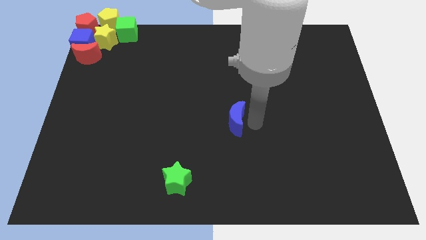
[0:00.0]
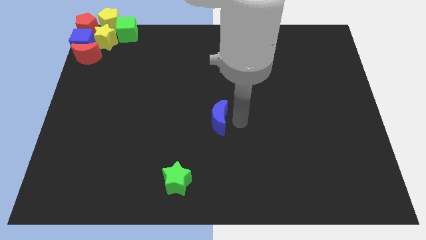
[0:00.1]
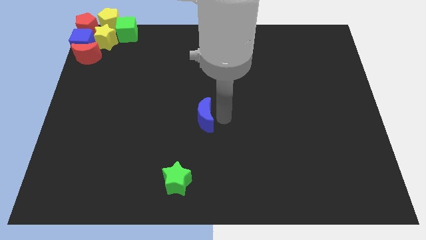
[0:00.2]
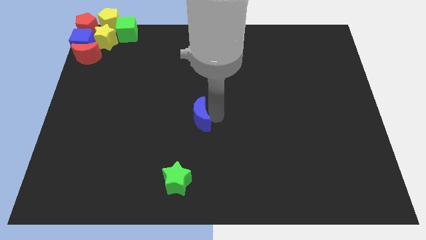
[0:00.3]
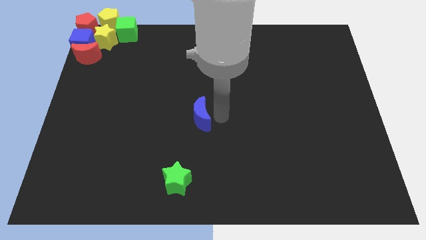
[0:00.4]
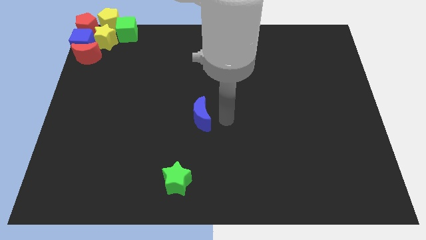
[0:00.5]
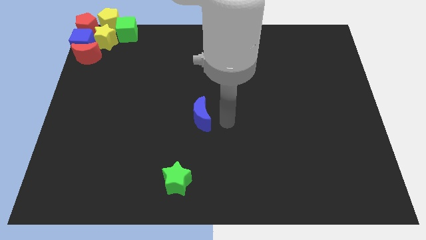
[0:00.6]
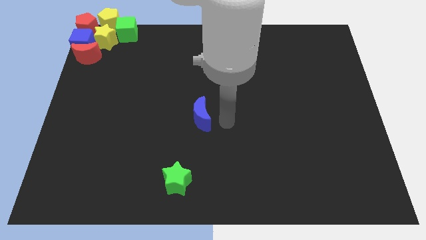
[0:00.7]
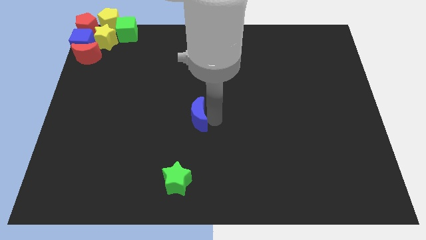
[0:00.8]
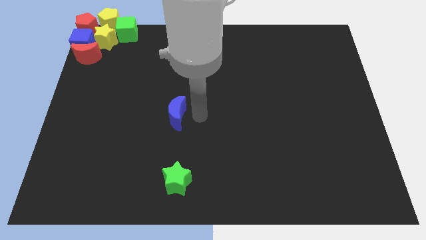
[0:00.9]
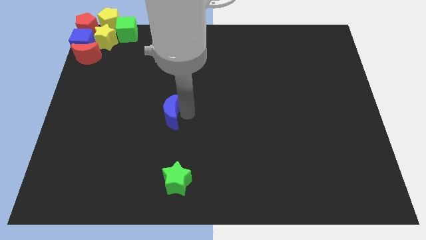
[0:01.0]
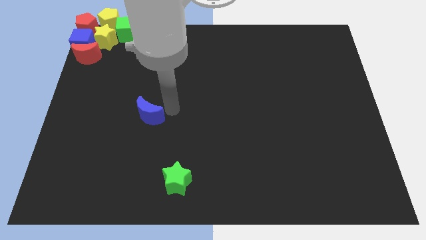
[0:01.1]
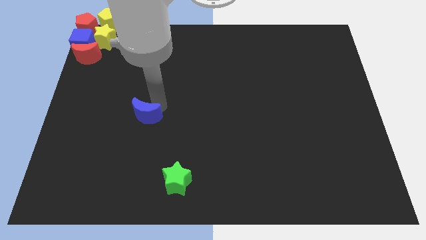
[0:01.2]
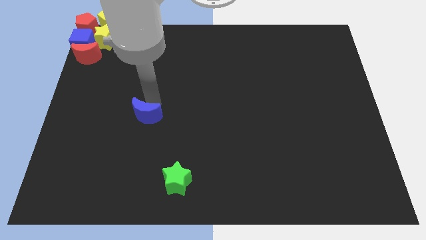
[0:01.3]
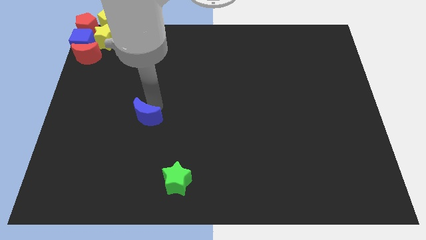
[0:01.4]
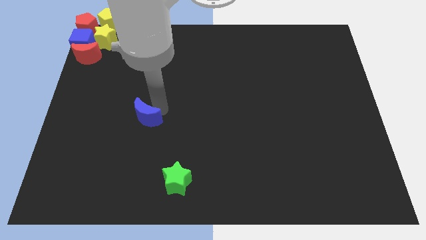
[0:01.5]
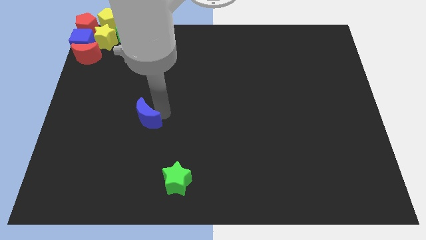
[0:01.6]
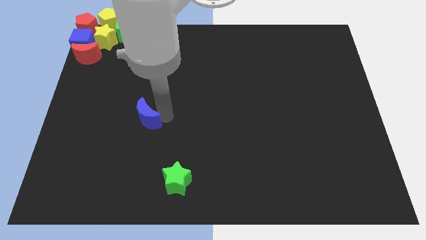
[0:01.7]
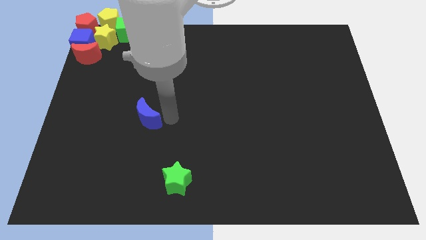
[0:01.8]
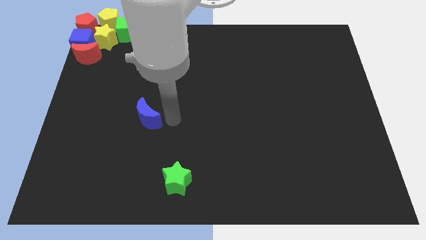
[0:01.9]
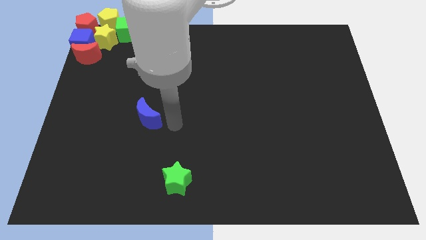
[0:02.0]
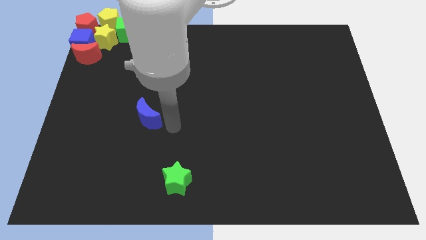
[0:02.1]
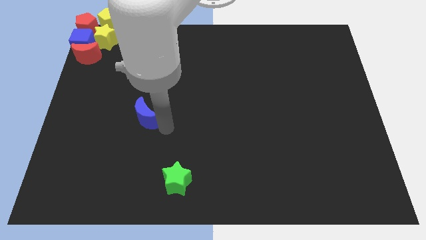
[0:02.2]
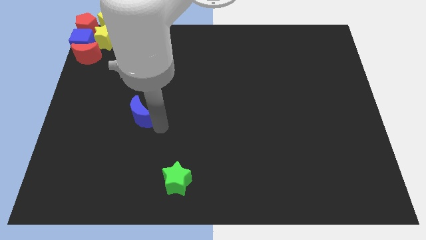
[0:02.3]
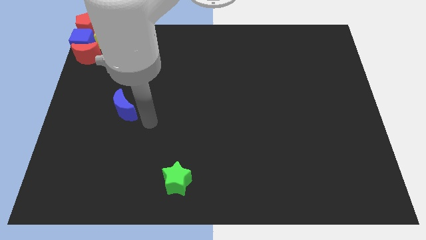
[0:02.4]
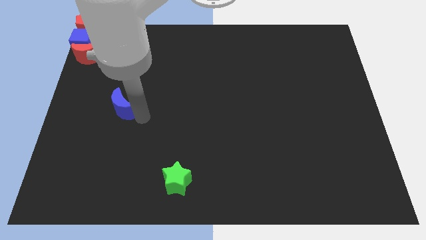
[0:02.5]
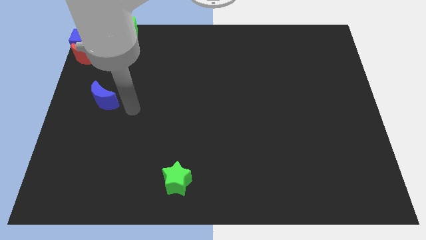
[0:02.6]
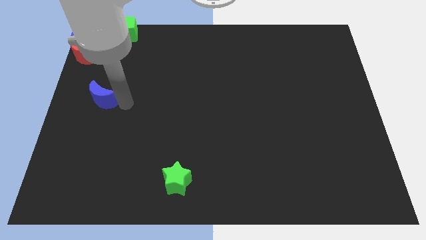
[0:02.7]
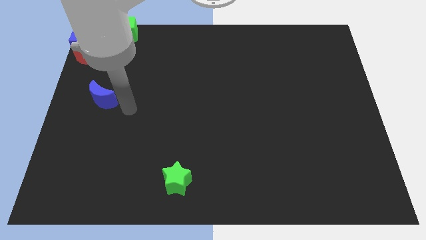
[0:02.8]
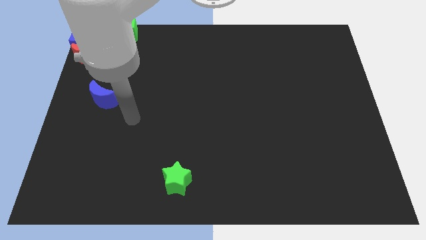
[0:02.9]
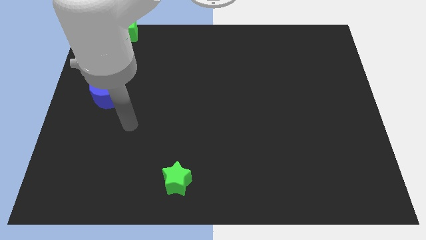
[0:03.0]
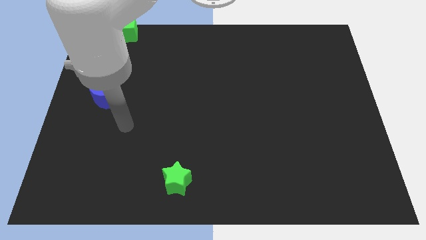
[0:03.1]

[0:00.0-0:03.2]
move the blue moon diagonally top left to the green star

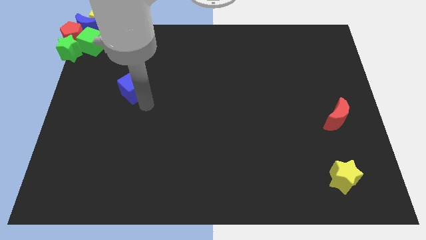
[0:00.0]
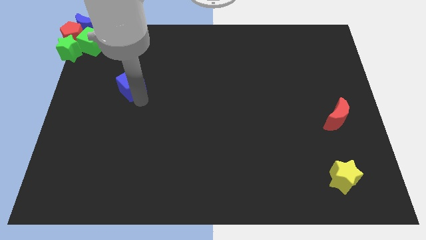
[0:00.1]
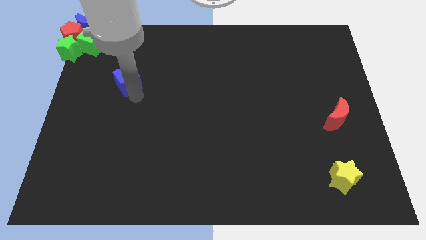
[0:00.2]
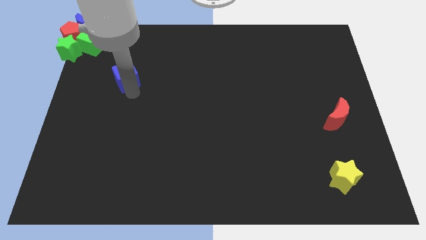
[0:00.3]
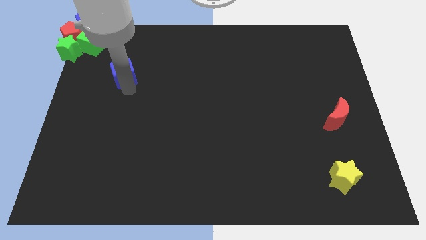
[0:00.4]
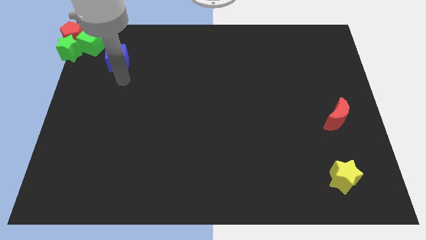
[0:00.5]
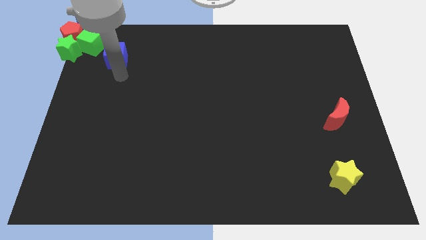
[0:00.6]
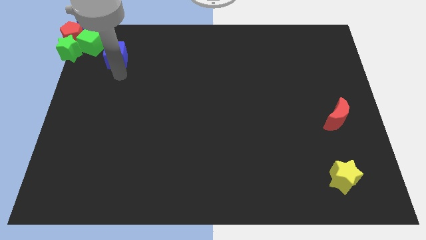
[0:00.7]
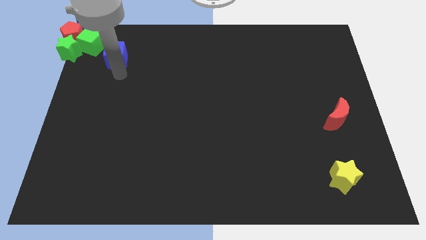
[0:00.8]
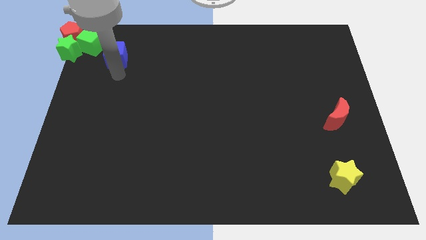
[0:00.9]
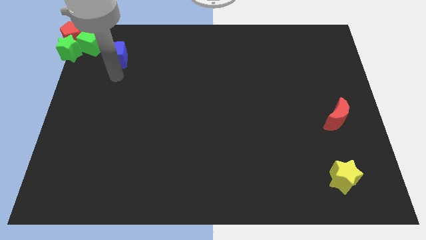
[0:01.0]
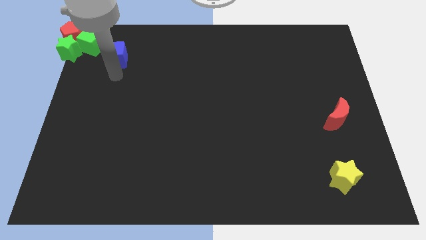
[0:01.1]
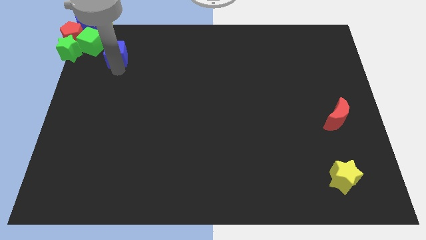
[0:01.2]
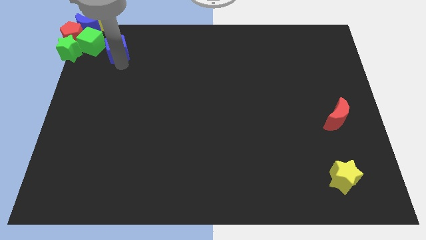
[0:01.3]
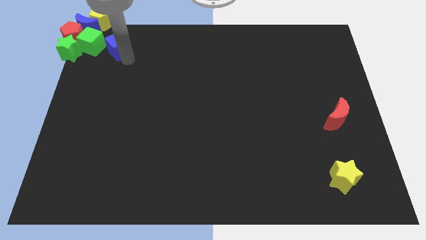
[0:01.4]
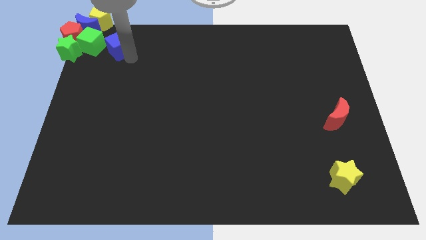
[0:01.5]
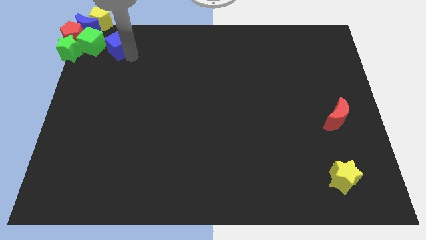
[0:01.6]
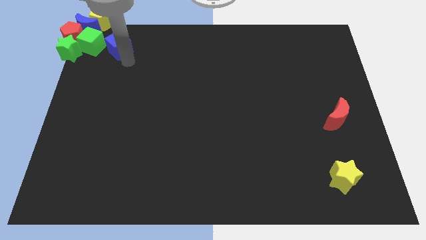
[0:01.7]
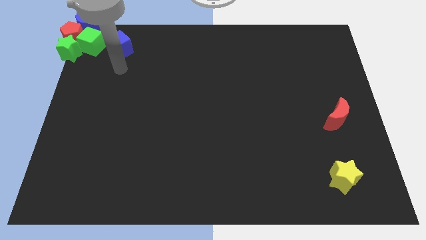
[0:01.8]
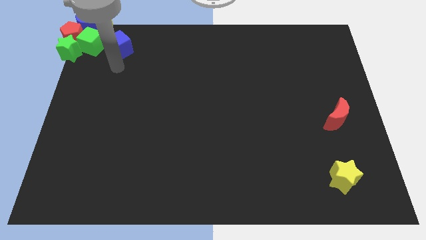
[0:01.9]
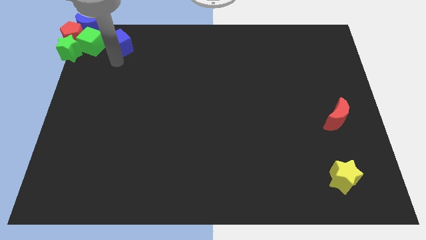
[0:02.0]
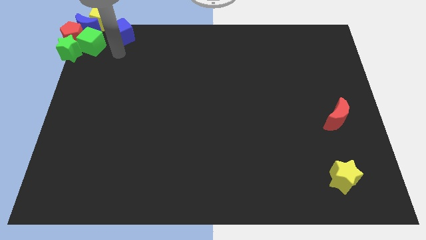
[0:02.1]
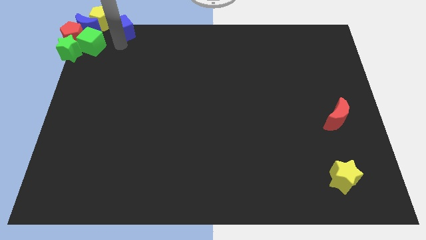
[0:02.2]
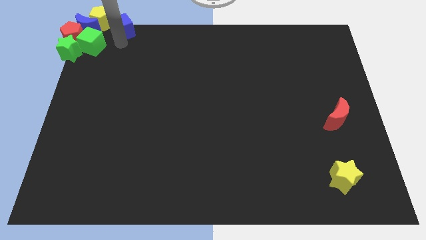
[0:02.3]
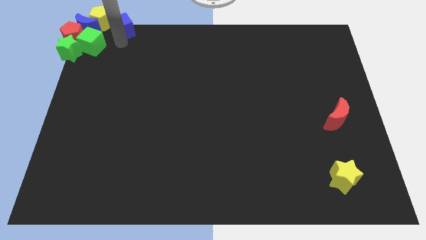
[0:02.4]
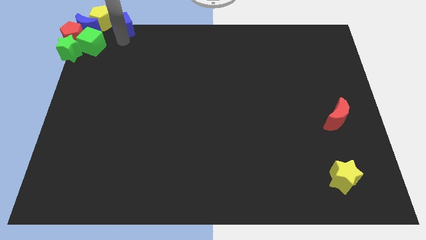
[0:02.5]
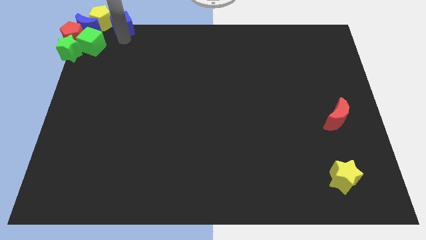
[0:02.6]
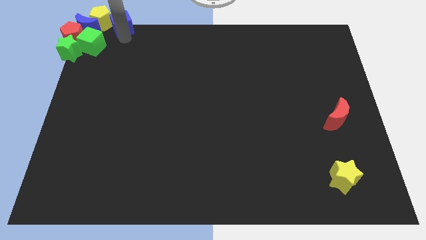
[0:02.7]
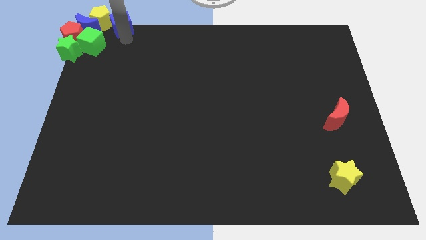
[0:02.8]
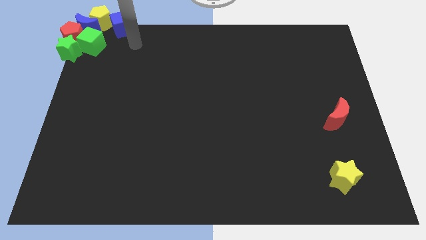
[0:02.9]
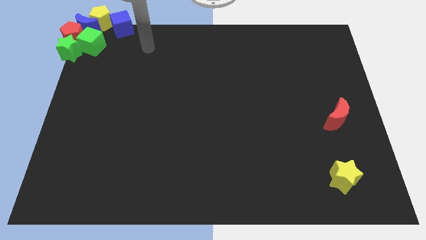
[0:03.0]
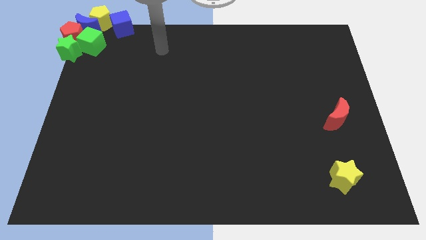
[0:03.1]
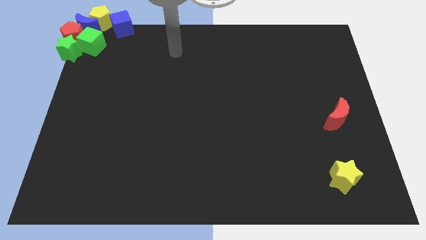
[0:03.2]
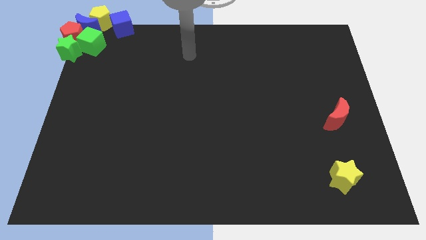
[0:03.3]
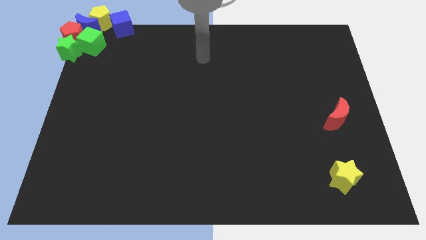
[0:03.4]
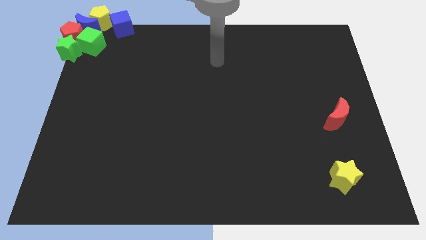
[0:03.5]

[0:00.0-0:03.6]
put the blue cube parallel right to the blue moon

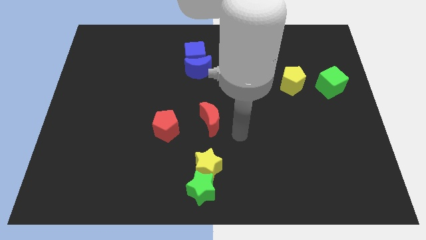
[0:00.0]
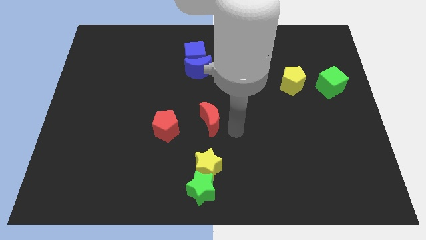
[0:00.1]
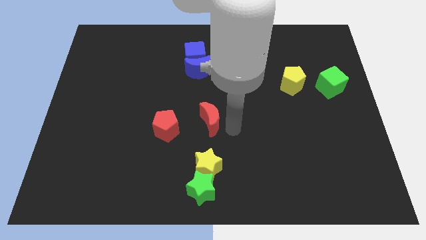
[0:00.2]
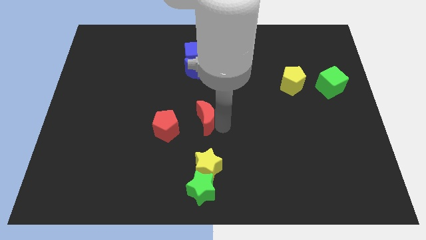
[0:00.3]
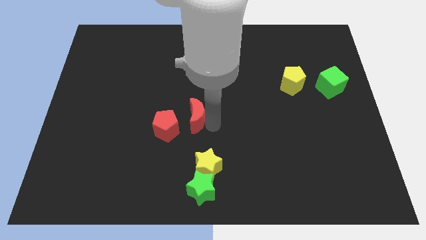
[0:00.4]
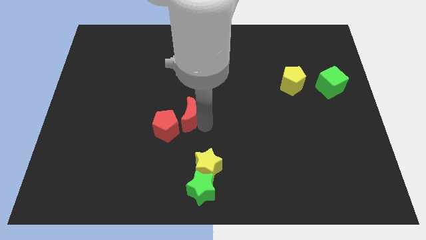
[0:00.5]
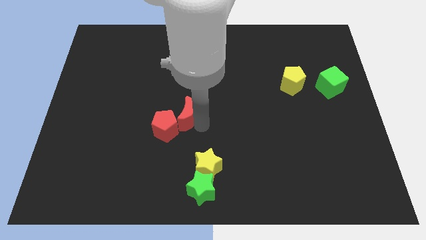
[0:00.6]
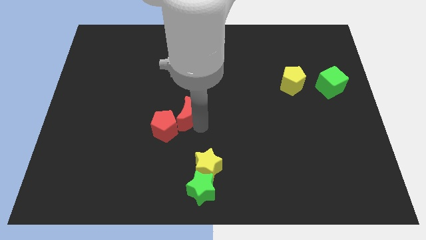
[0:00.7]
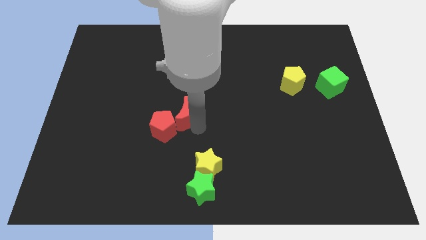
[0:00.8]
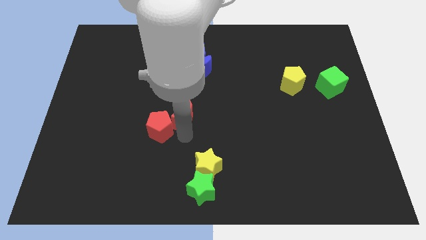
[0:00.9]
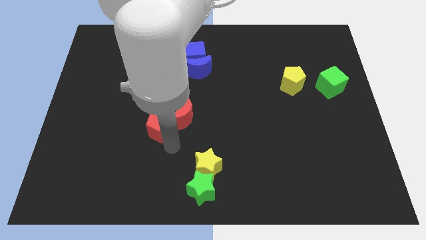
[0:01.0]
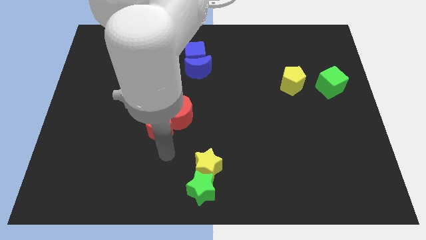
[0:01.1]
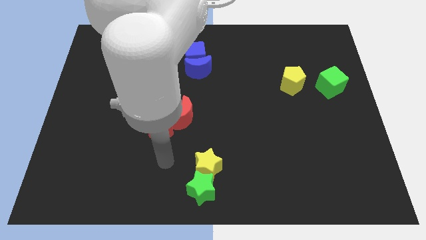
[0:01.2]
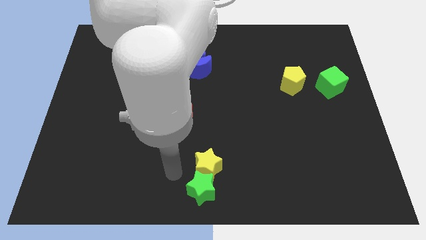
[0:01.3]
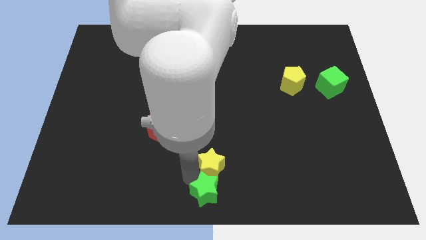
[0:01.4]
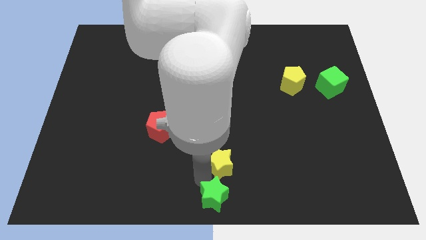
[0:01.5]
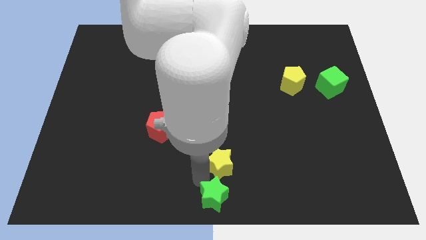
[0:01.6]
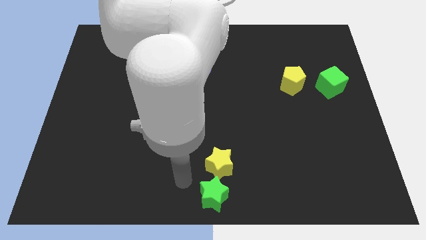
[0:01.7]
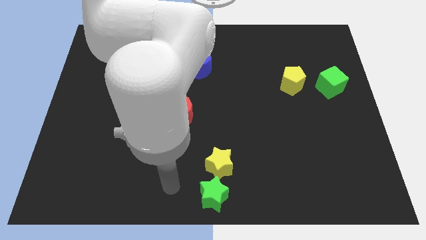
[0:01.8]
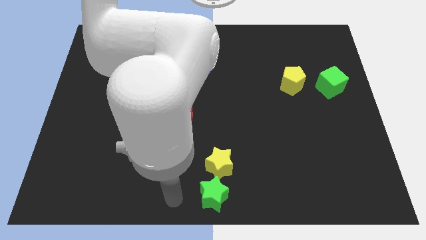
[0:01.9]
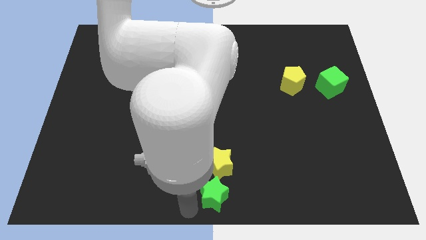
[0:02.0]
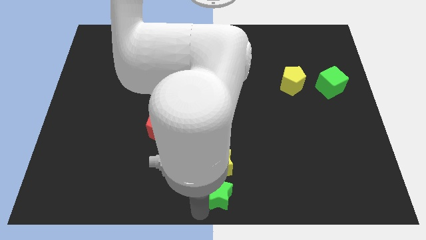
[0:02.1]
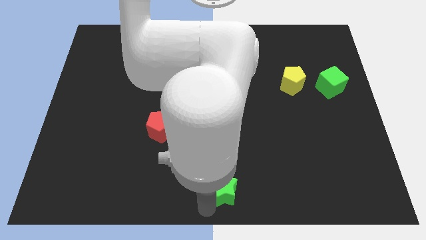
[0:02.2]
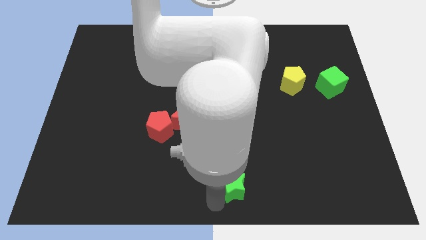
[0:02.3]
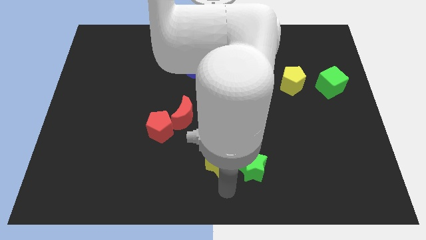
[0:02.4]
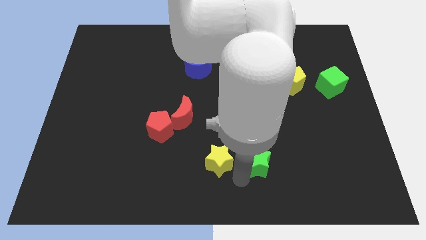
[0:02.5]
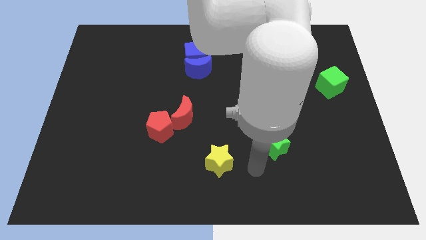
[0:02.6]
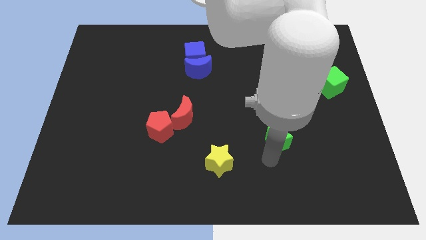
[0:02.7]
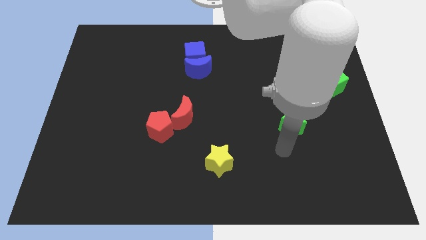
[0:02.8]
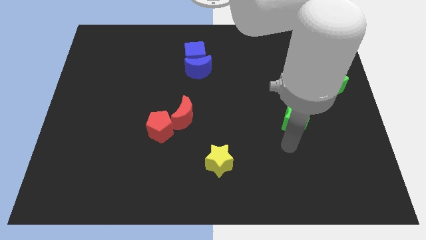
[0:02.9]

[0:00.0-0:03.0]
place green star below yellow pentagon
